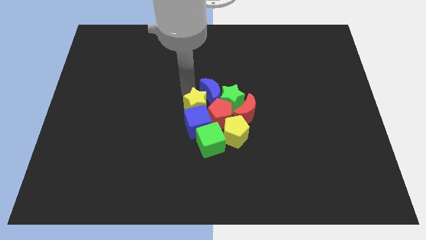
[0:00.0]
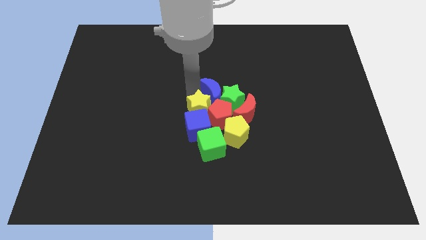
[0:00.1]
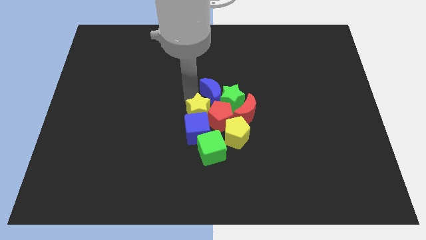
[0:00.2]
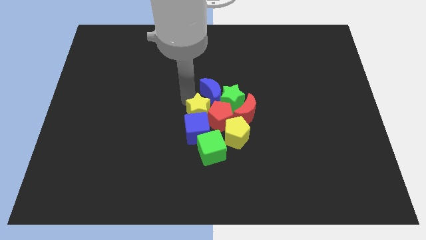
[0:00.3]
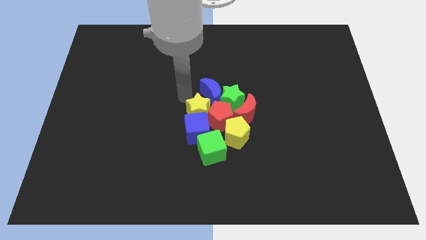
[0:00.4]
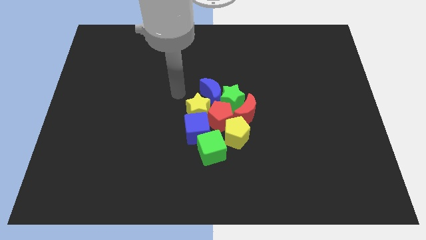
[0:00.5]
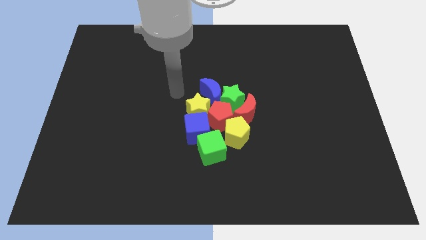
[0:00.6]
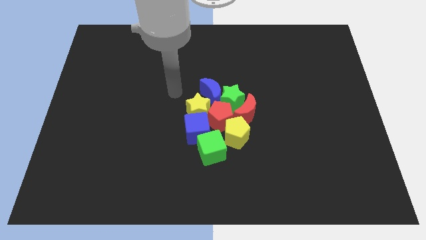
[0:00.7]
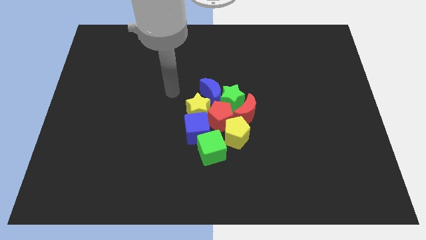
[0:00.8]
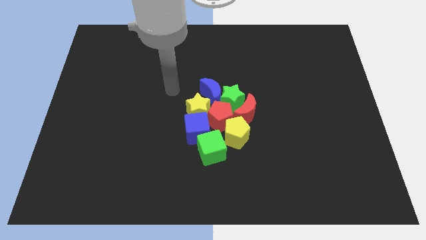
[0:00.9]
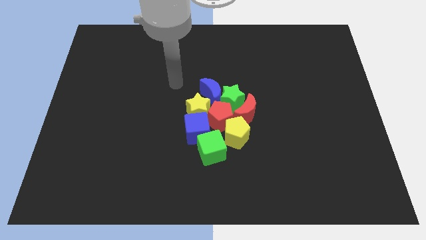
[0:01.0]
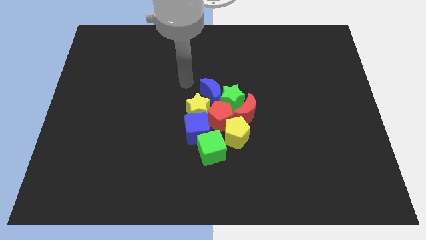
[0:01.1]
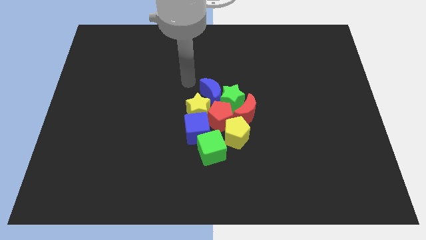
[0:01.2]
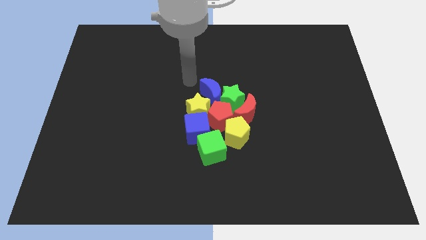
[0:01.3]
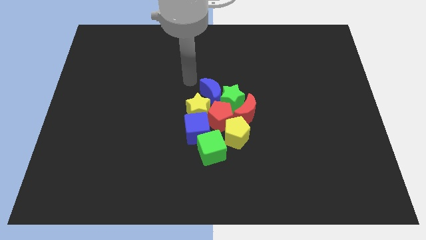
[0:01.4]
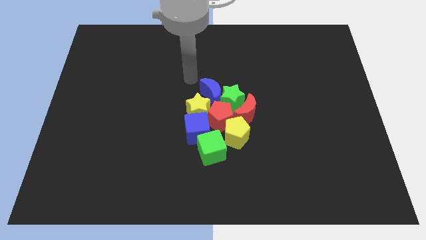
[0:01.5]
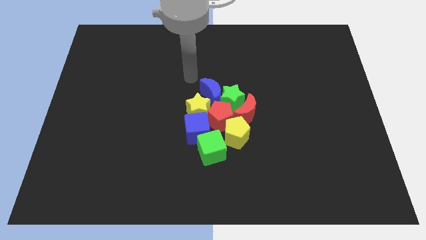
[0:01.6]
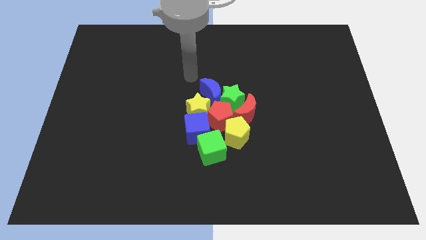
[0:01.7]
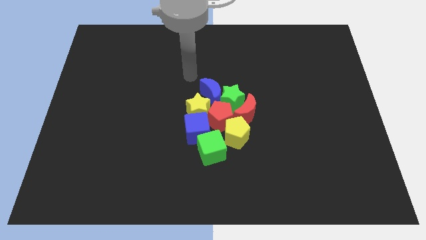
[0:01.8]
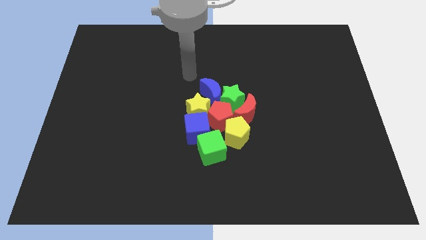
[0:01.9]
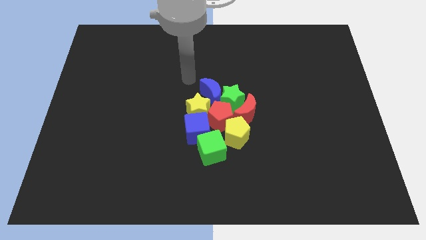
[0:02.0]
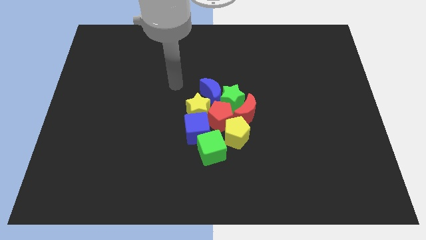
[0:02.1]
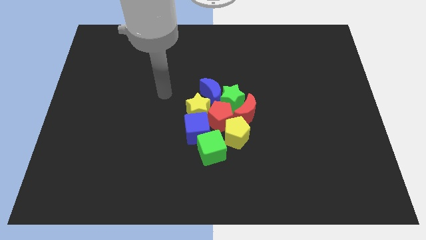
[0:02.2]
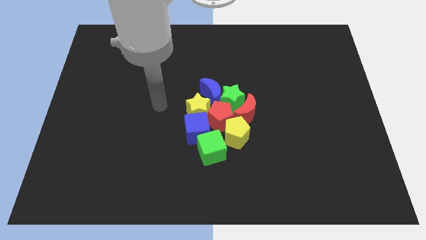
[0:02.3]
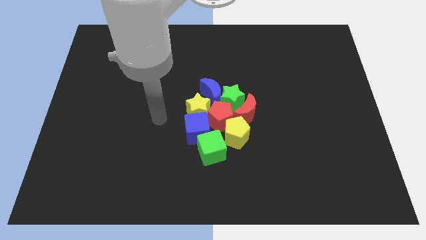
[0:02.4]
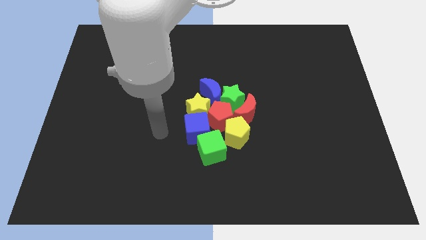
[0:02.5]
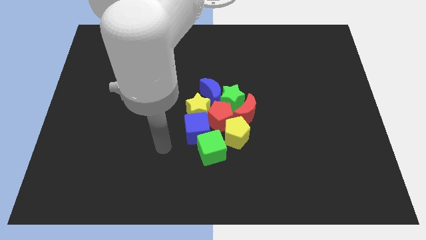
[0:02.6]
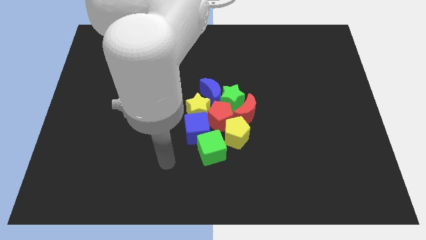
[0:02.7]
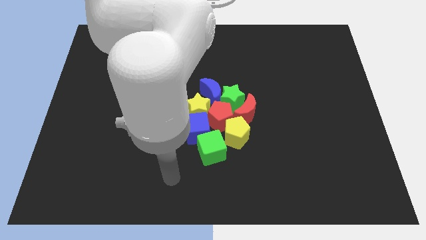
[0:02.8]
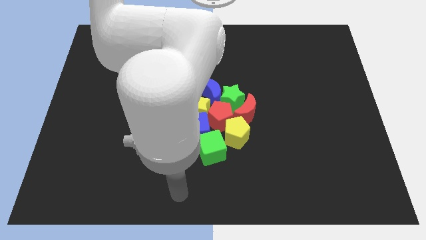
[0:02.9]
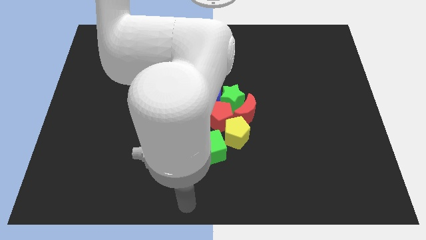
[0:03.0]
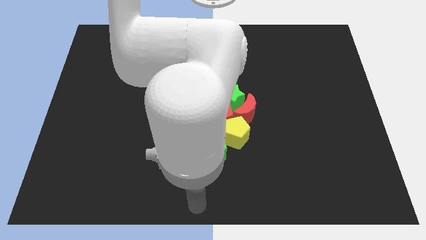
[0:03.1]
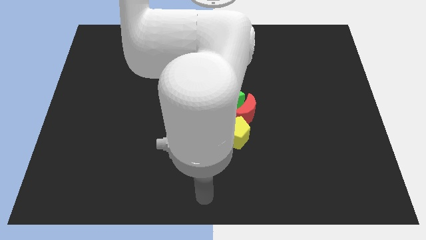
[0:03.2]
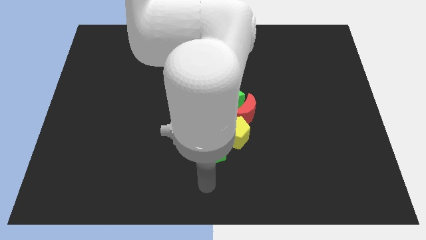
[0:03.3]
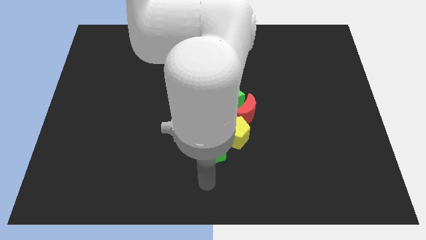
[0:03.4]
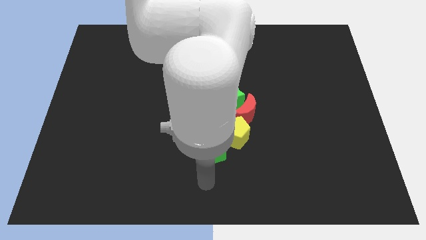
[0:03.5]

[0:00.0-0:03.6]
push the yellow star into the blue cube

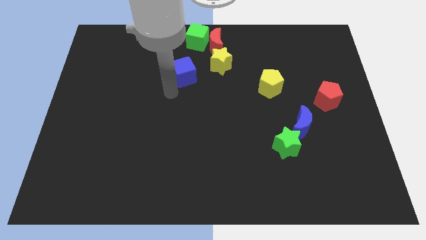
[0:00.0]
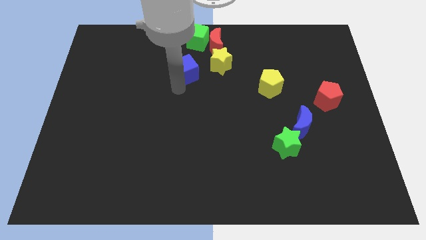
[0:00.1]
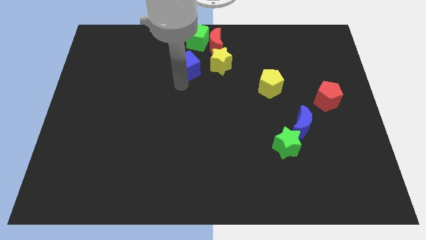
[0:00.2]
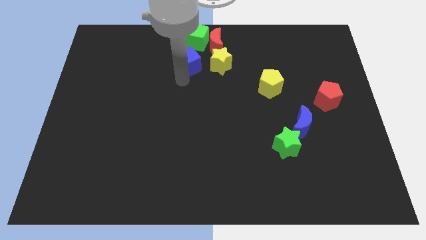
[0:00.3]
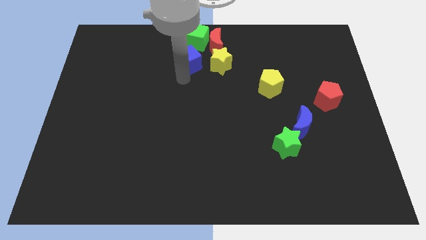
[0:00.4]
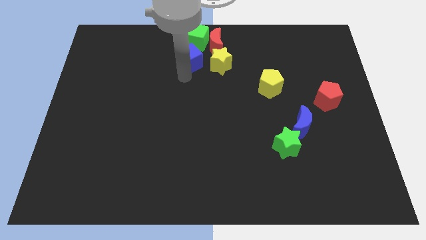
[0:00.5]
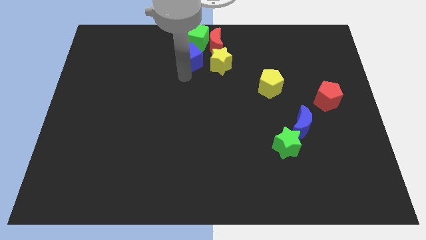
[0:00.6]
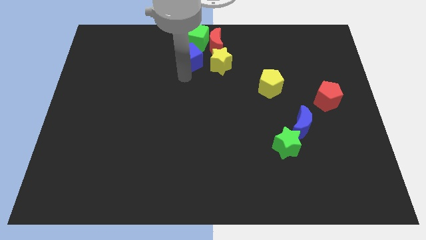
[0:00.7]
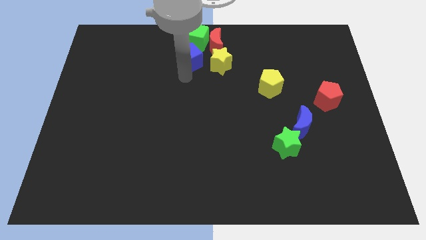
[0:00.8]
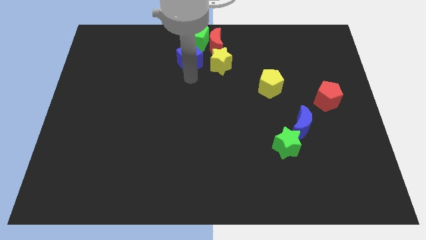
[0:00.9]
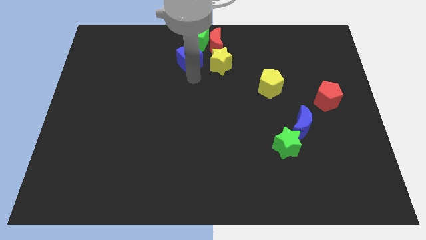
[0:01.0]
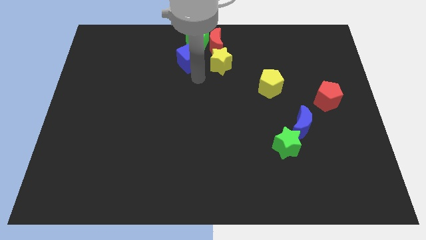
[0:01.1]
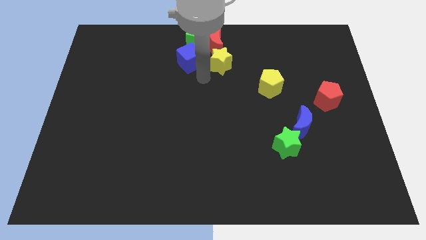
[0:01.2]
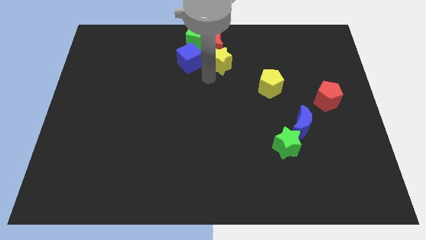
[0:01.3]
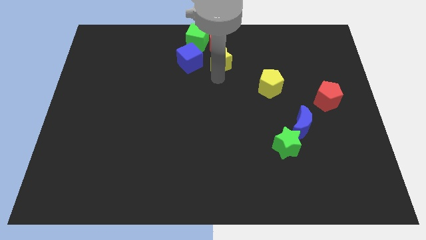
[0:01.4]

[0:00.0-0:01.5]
place blue cube to the bottom of green cube

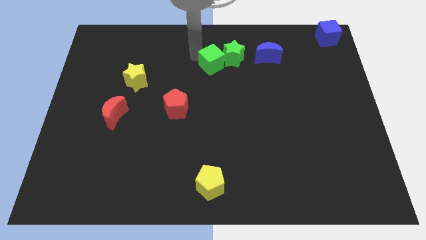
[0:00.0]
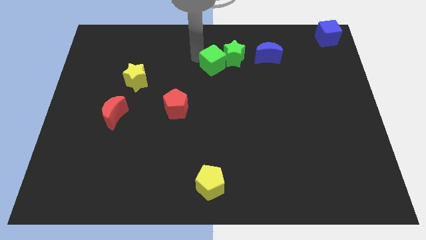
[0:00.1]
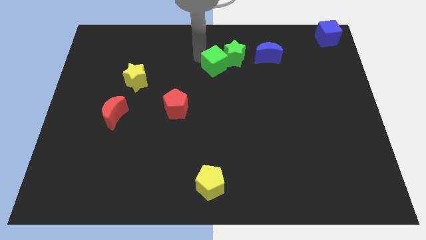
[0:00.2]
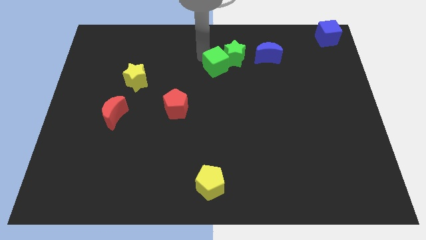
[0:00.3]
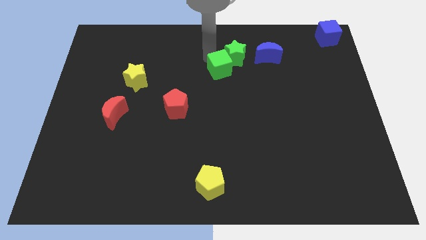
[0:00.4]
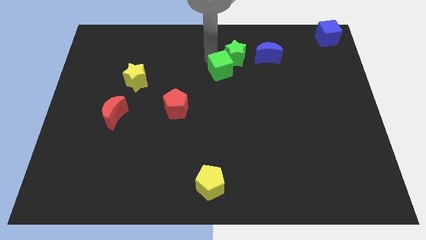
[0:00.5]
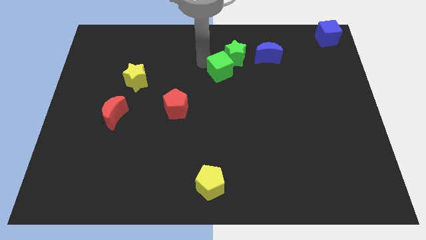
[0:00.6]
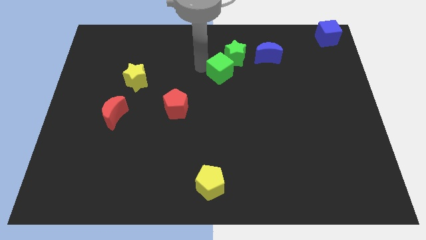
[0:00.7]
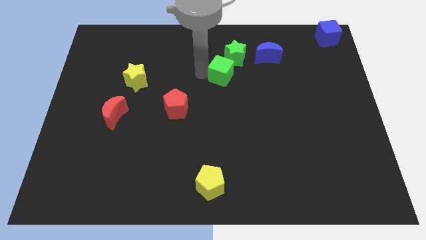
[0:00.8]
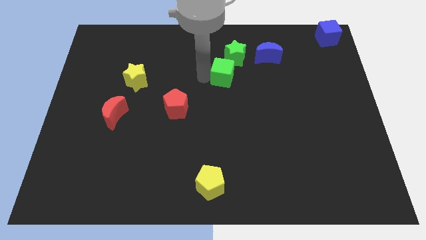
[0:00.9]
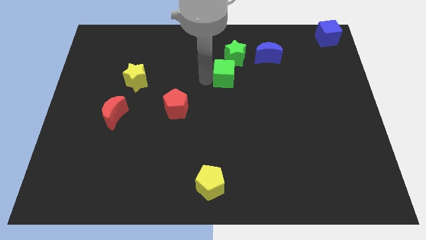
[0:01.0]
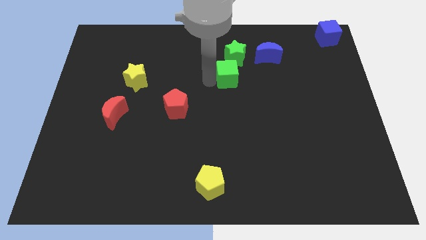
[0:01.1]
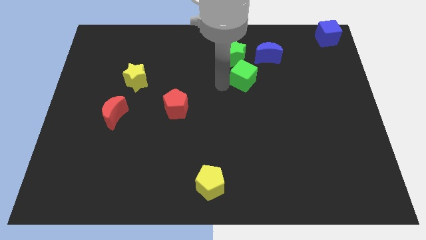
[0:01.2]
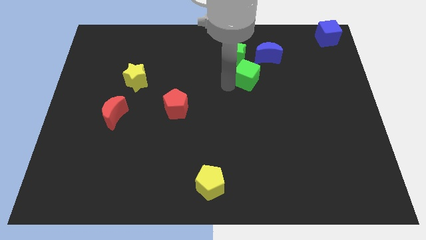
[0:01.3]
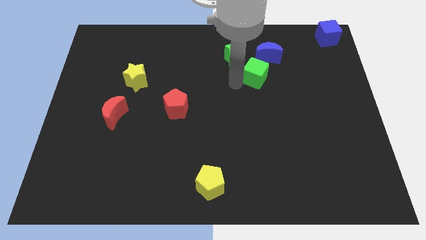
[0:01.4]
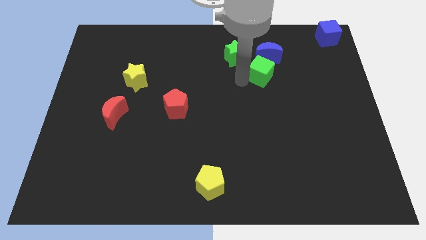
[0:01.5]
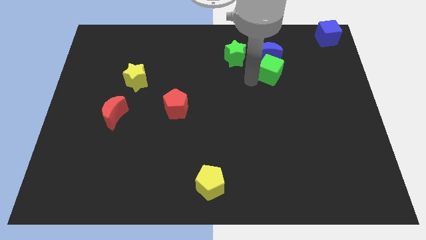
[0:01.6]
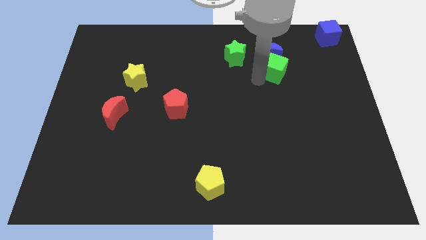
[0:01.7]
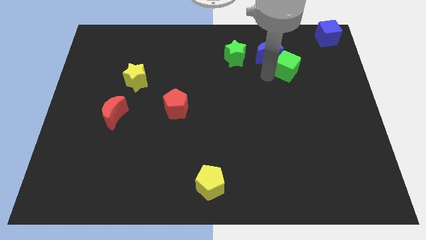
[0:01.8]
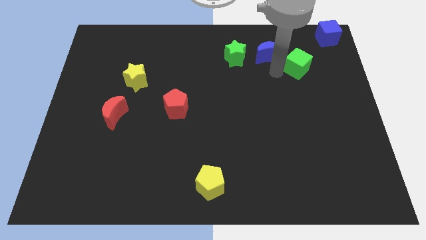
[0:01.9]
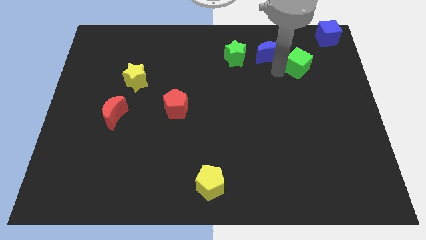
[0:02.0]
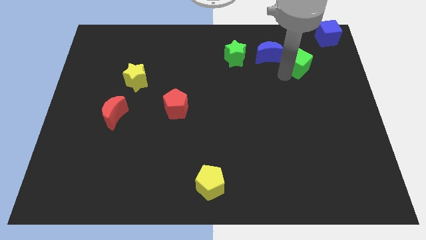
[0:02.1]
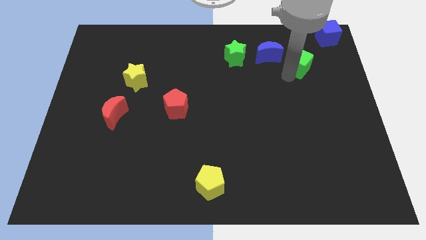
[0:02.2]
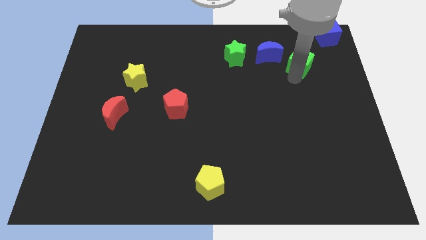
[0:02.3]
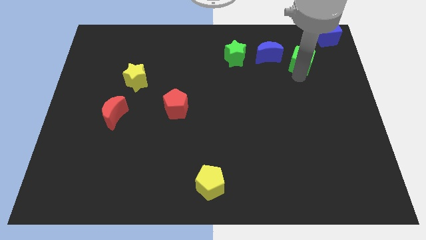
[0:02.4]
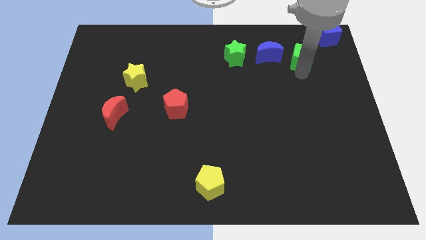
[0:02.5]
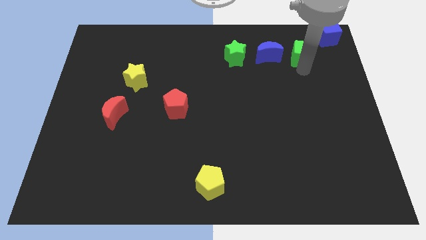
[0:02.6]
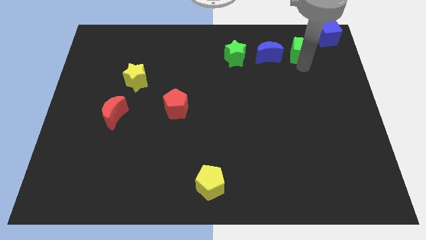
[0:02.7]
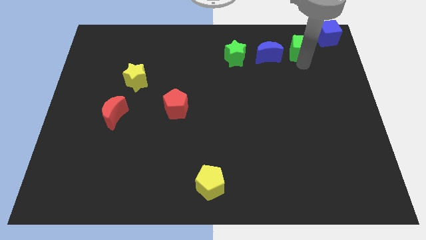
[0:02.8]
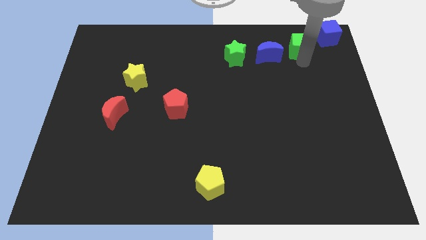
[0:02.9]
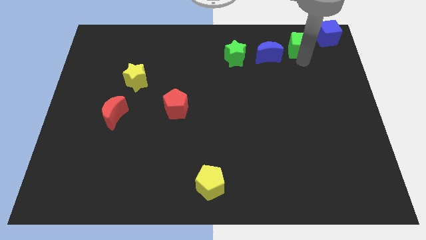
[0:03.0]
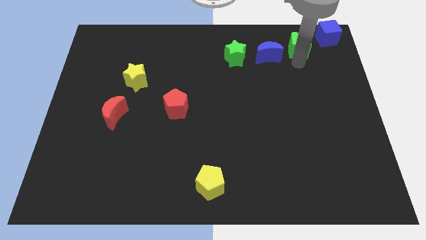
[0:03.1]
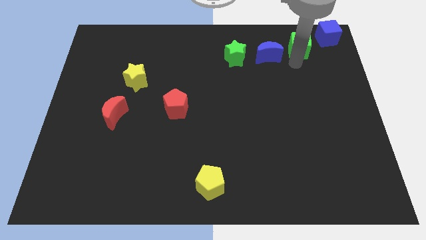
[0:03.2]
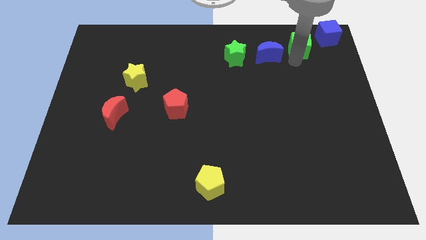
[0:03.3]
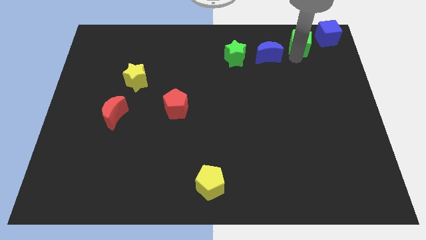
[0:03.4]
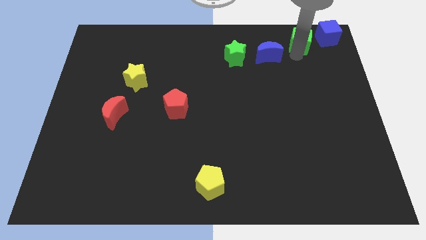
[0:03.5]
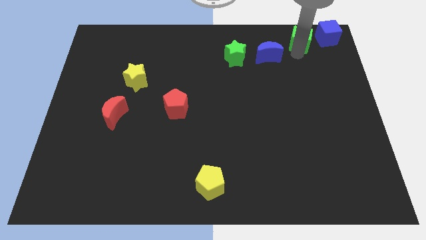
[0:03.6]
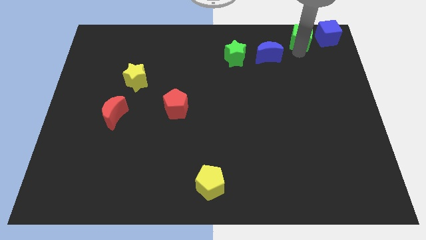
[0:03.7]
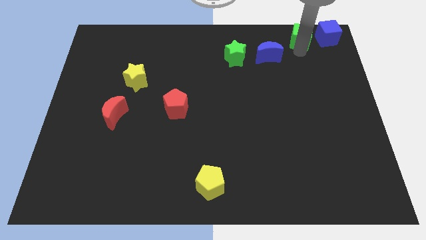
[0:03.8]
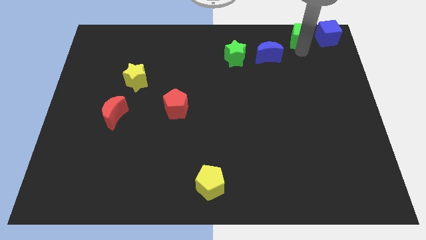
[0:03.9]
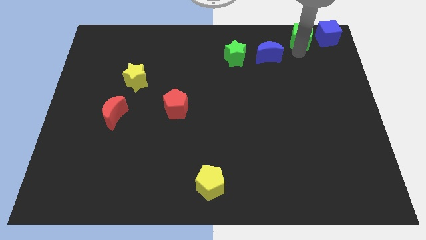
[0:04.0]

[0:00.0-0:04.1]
push the green cube to the left of the blue cube
